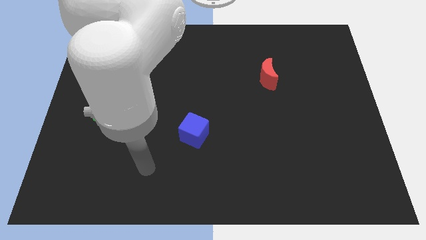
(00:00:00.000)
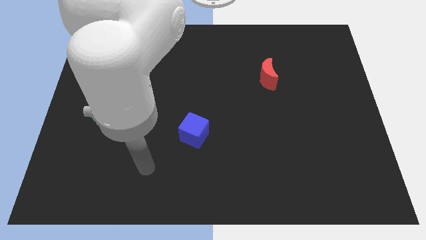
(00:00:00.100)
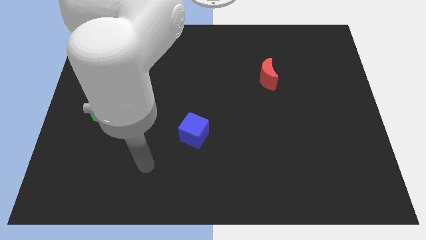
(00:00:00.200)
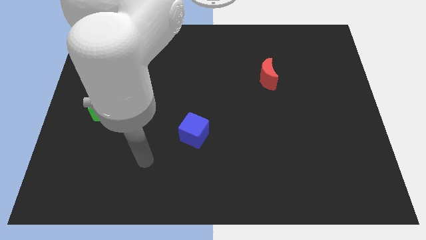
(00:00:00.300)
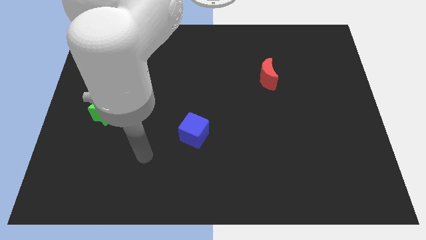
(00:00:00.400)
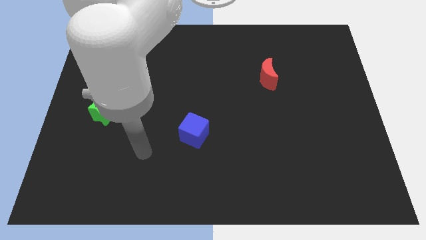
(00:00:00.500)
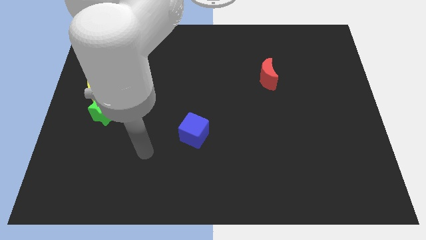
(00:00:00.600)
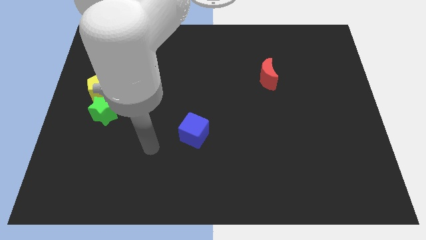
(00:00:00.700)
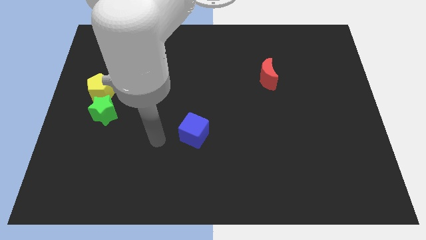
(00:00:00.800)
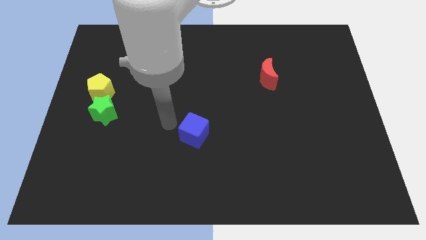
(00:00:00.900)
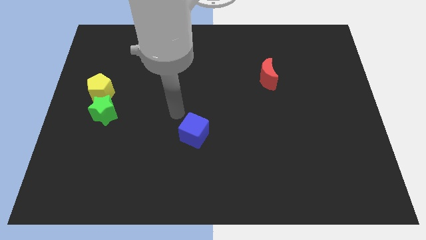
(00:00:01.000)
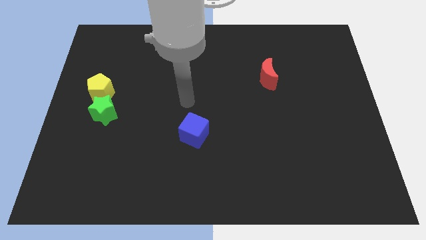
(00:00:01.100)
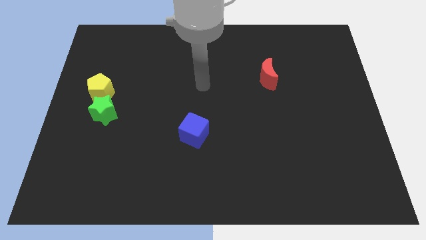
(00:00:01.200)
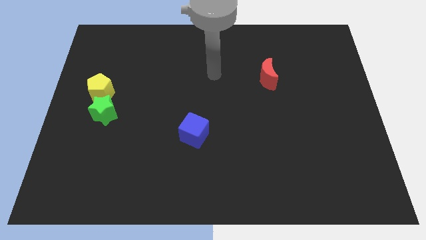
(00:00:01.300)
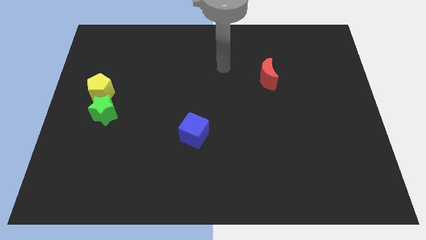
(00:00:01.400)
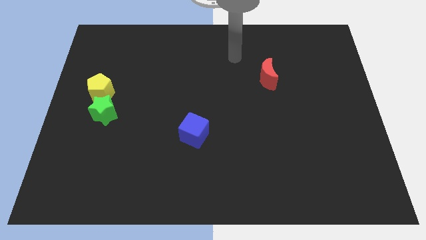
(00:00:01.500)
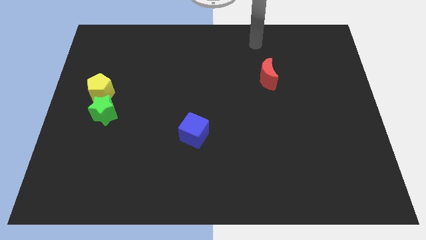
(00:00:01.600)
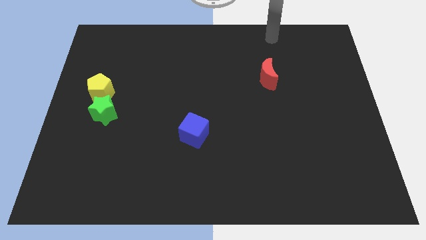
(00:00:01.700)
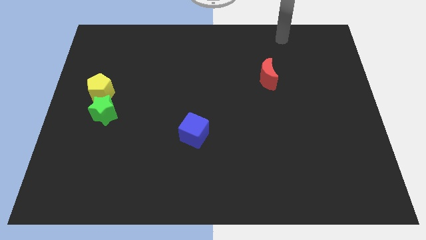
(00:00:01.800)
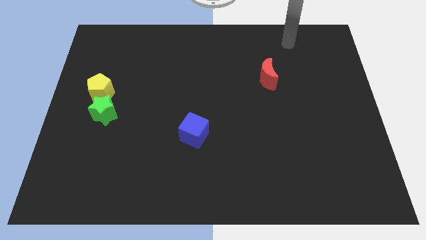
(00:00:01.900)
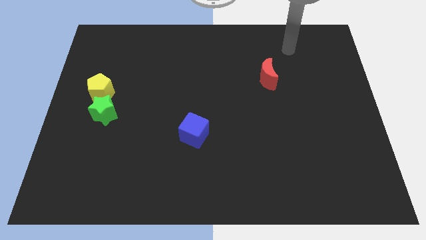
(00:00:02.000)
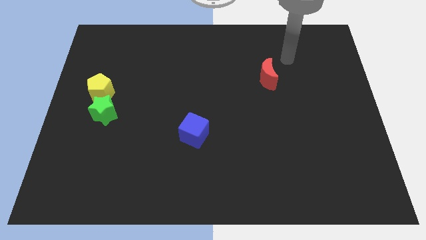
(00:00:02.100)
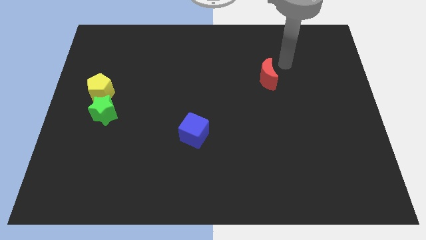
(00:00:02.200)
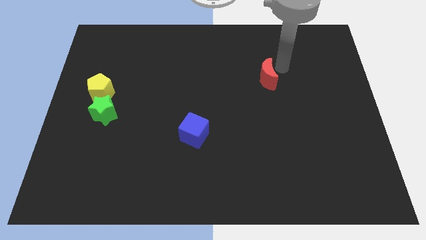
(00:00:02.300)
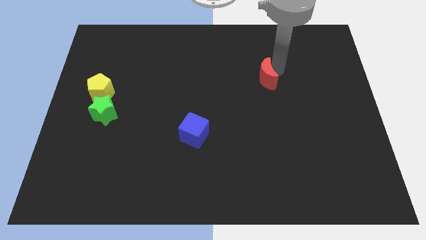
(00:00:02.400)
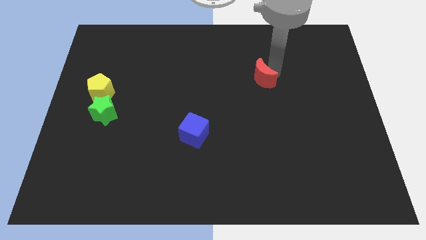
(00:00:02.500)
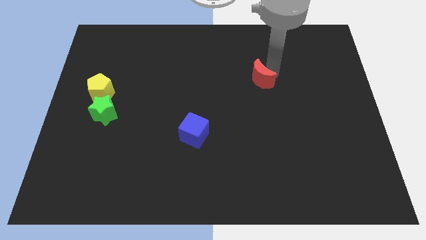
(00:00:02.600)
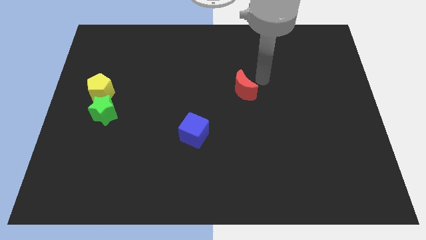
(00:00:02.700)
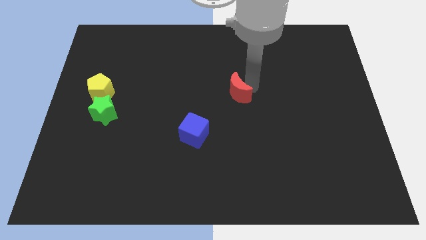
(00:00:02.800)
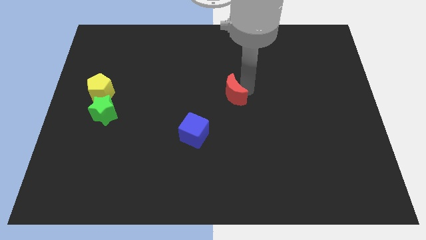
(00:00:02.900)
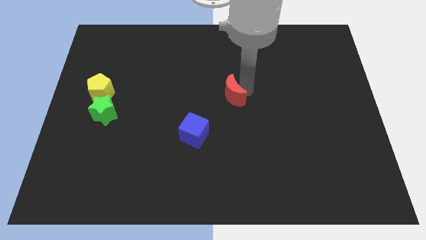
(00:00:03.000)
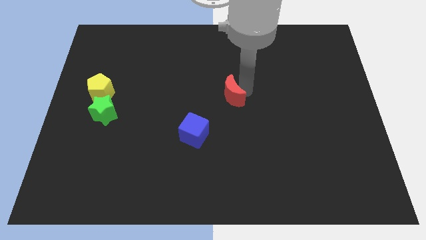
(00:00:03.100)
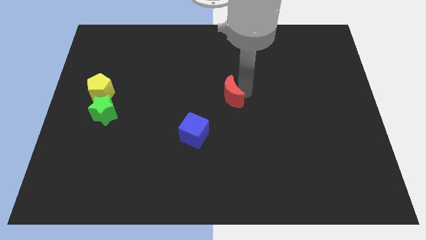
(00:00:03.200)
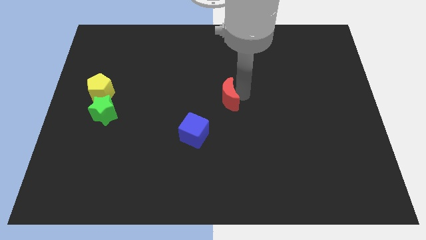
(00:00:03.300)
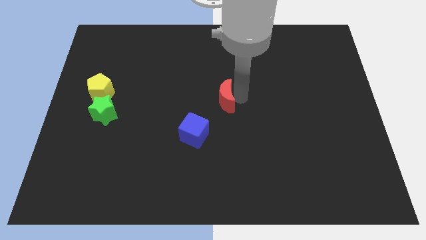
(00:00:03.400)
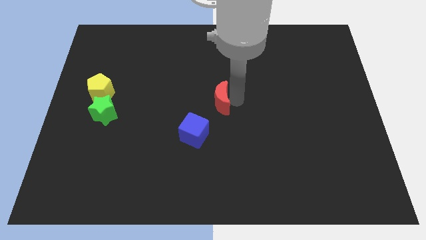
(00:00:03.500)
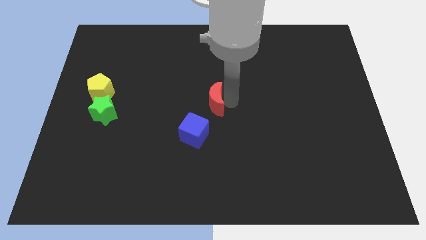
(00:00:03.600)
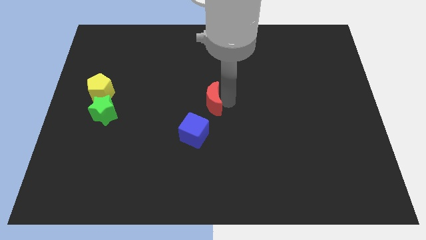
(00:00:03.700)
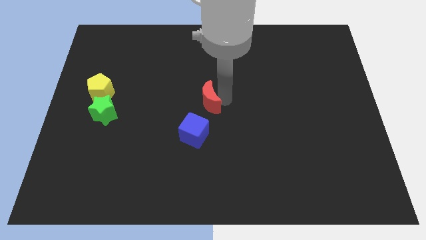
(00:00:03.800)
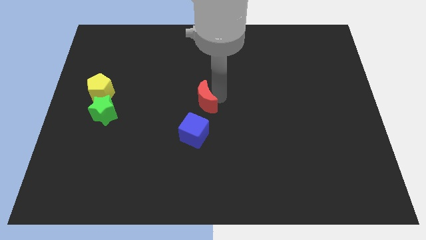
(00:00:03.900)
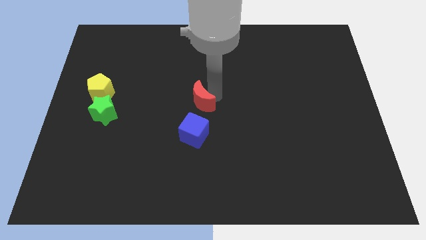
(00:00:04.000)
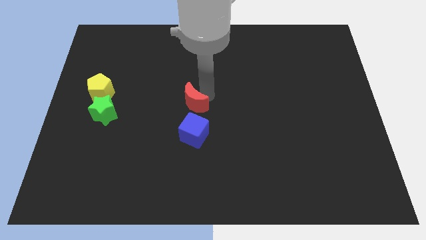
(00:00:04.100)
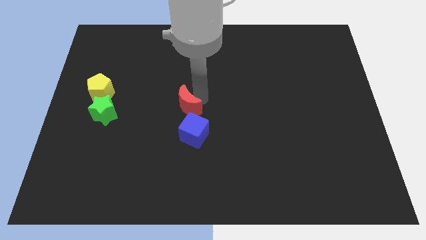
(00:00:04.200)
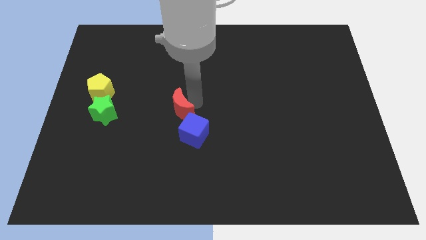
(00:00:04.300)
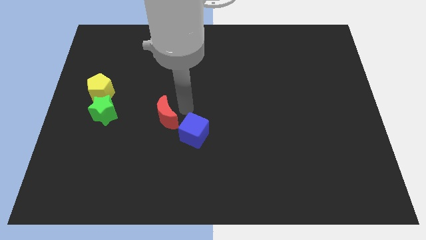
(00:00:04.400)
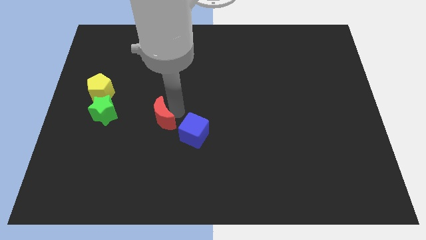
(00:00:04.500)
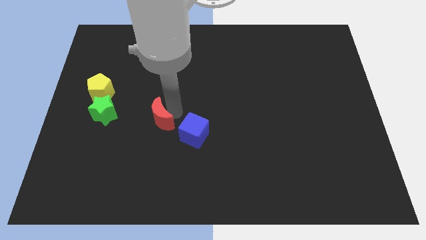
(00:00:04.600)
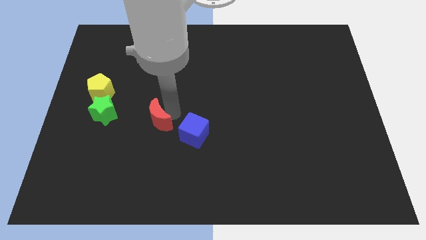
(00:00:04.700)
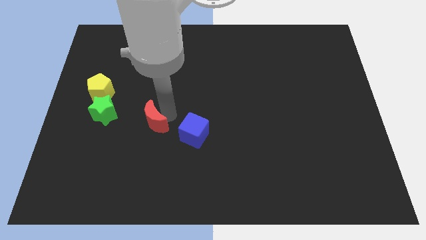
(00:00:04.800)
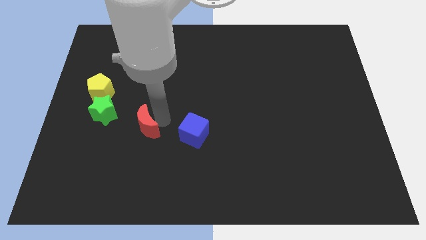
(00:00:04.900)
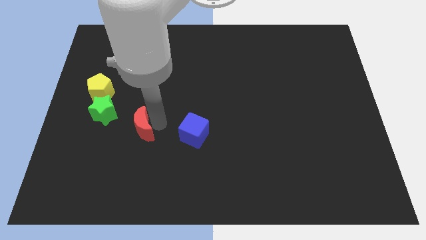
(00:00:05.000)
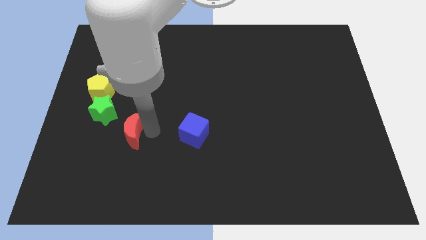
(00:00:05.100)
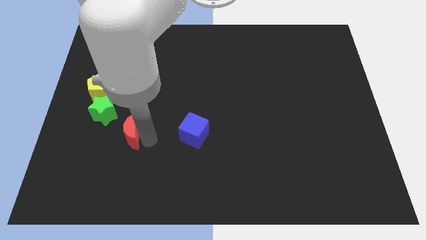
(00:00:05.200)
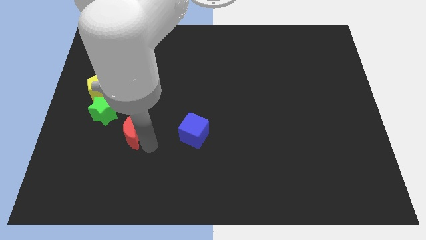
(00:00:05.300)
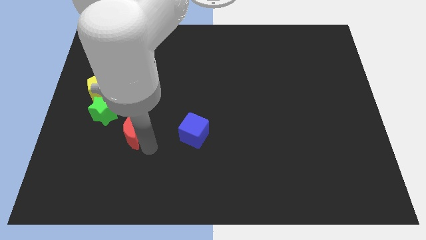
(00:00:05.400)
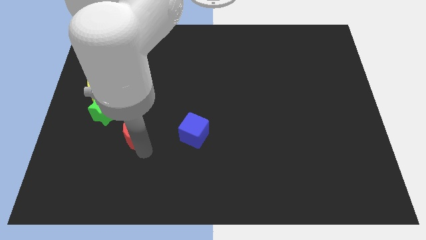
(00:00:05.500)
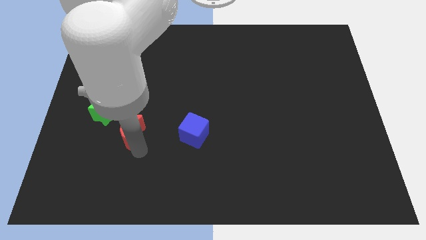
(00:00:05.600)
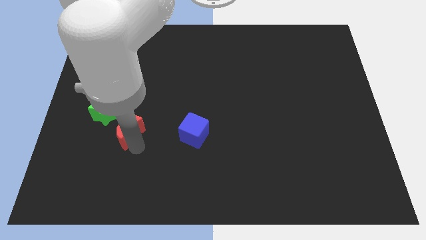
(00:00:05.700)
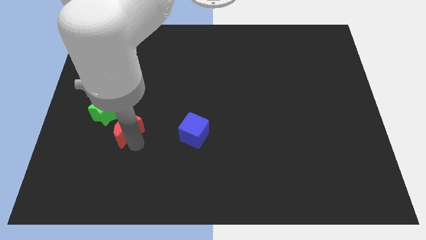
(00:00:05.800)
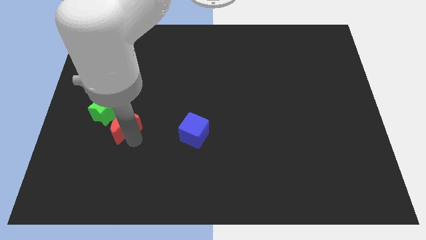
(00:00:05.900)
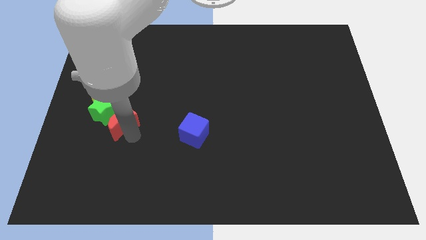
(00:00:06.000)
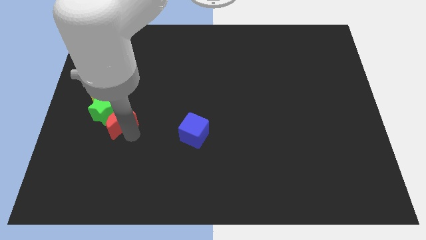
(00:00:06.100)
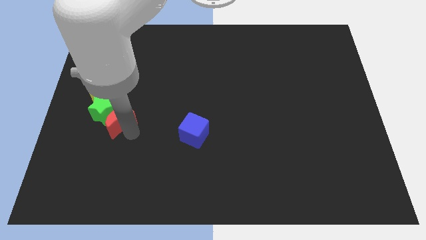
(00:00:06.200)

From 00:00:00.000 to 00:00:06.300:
slide the red moon towards the green block

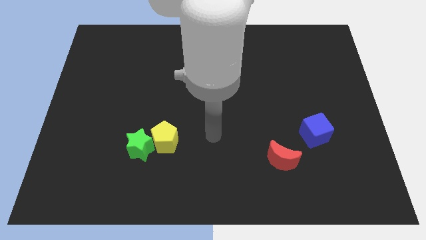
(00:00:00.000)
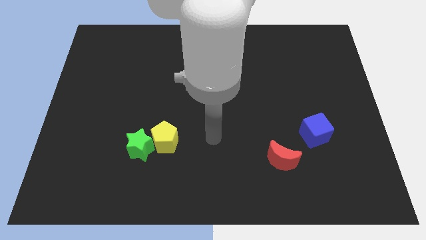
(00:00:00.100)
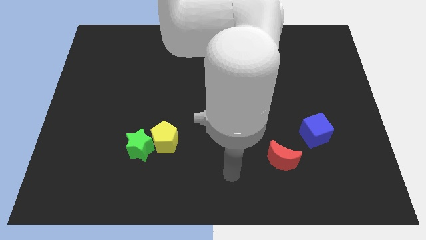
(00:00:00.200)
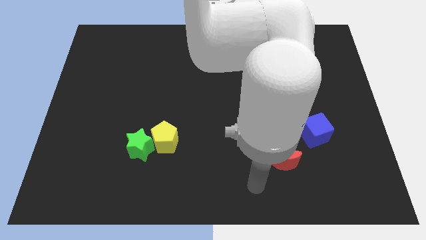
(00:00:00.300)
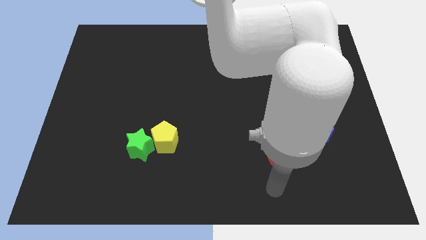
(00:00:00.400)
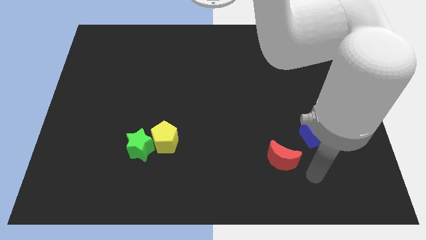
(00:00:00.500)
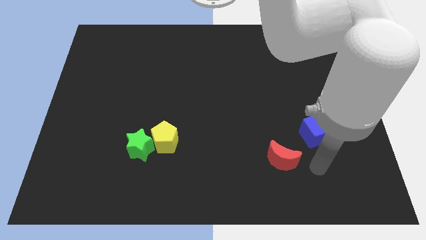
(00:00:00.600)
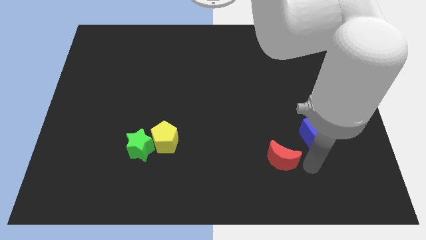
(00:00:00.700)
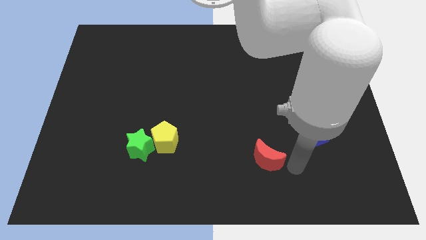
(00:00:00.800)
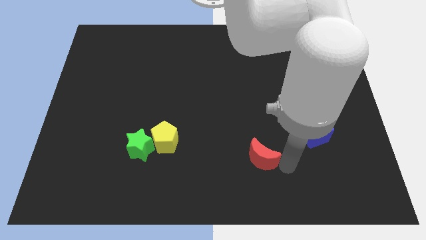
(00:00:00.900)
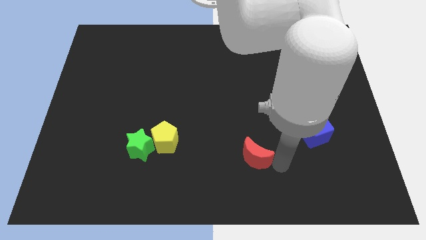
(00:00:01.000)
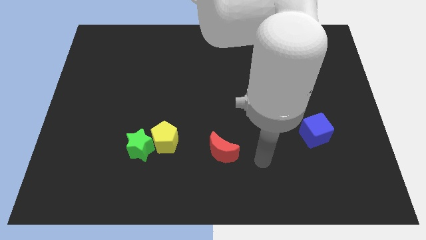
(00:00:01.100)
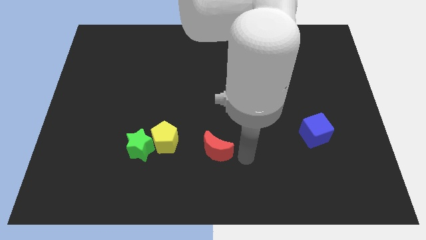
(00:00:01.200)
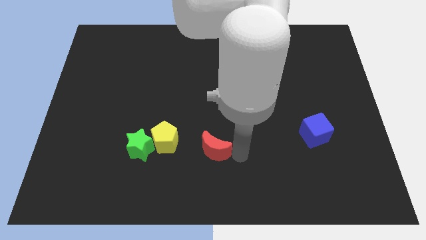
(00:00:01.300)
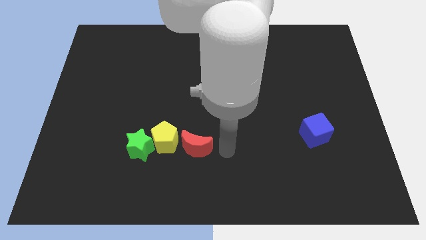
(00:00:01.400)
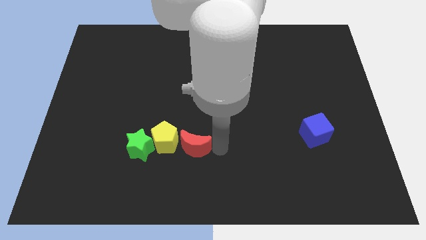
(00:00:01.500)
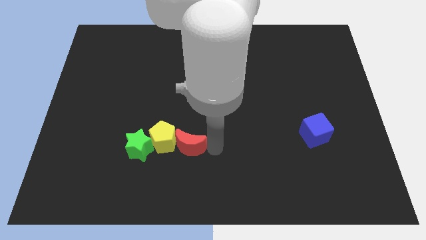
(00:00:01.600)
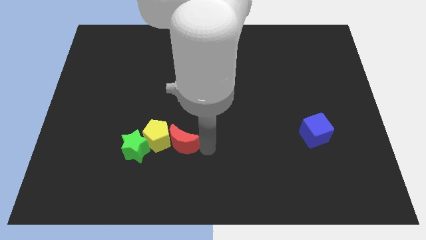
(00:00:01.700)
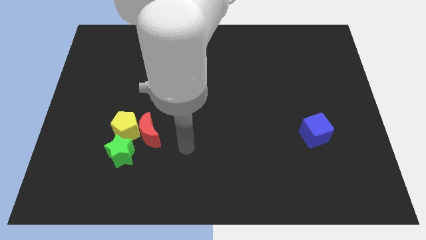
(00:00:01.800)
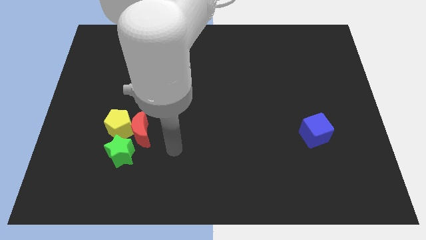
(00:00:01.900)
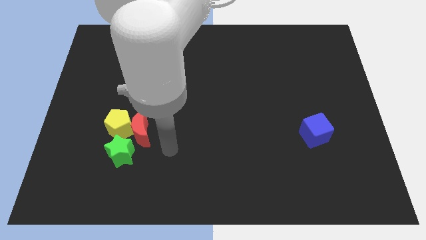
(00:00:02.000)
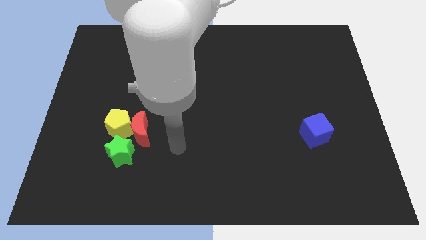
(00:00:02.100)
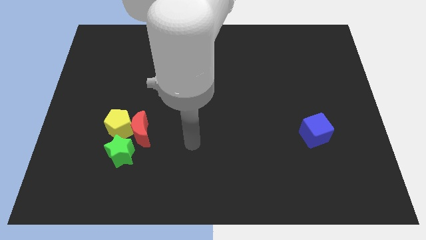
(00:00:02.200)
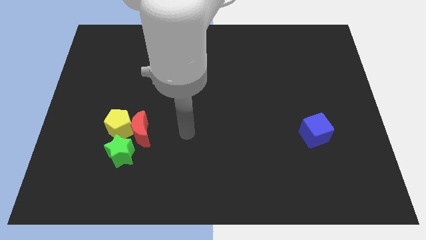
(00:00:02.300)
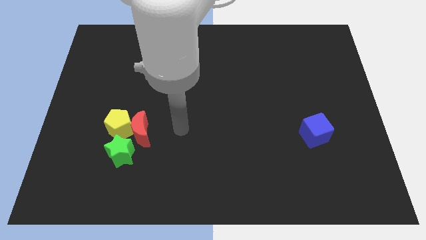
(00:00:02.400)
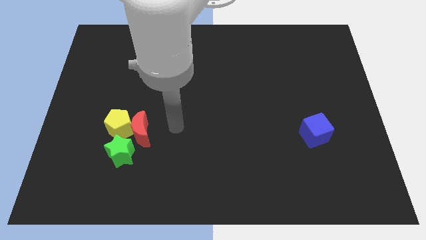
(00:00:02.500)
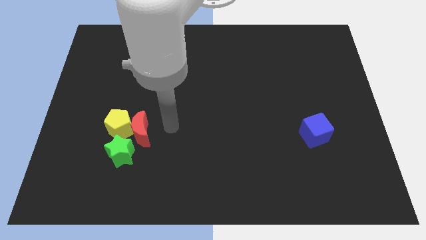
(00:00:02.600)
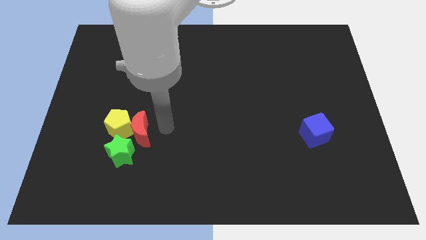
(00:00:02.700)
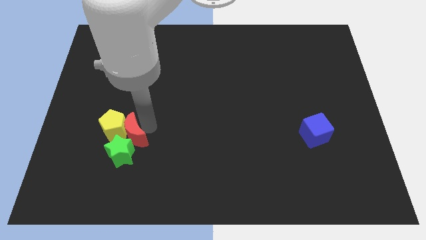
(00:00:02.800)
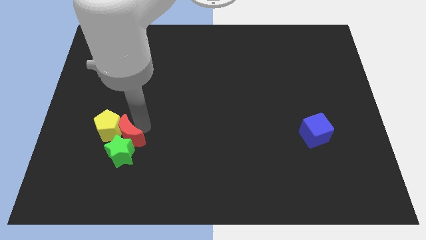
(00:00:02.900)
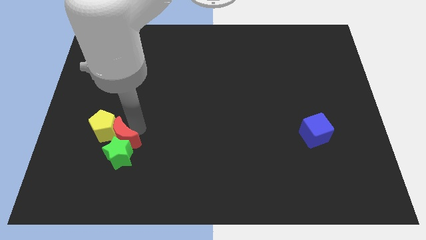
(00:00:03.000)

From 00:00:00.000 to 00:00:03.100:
move the moon next to the star
